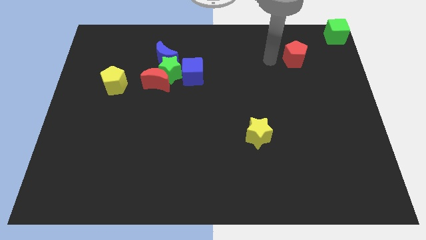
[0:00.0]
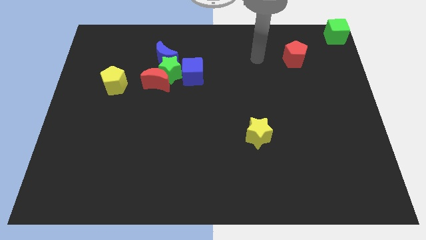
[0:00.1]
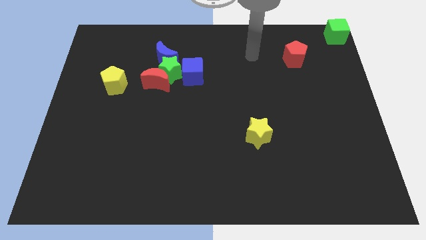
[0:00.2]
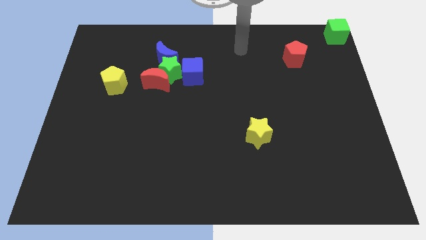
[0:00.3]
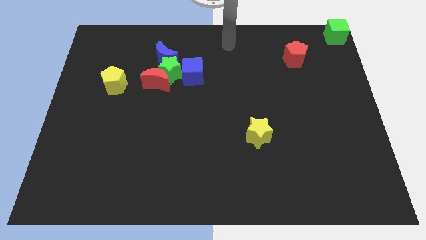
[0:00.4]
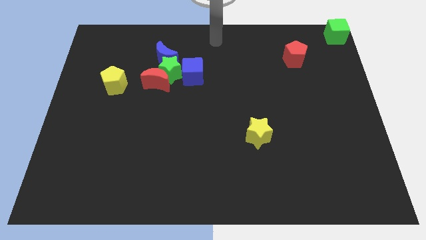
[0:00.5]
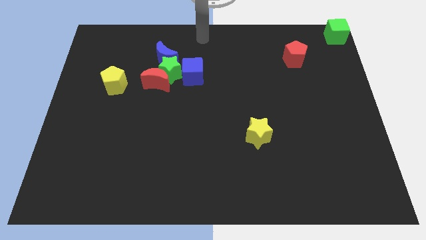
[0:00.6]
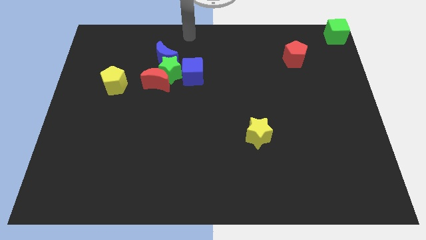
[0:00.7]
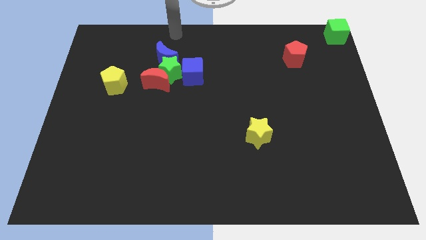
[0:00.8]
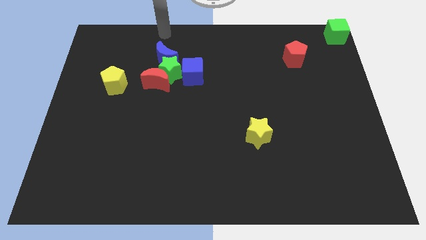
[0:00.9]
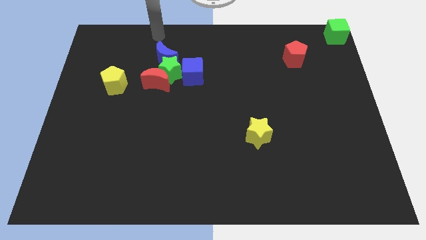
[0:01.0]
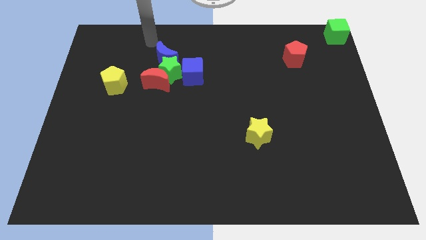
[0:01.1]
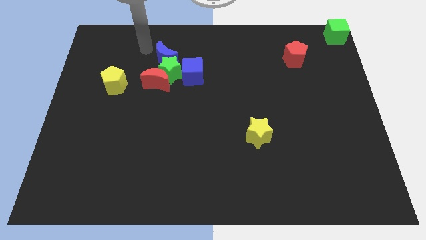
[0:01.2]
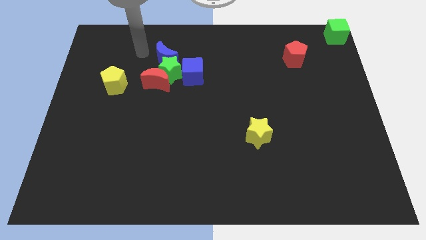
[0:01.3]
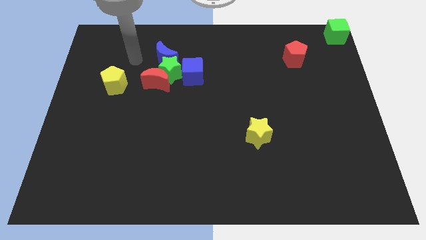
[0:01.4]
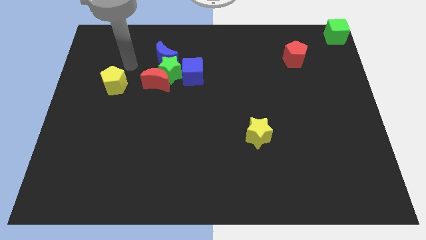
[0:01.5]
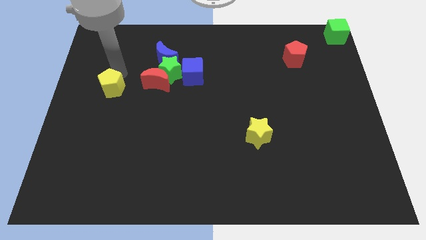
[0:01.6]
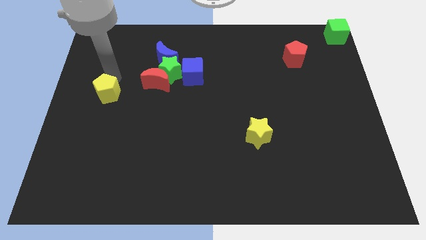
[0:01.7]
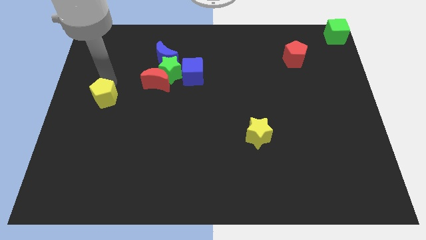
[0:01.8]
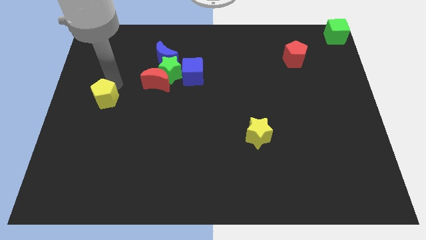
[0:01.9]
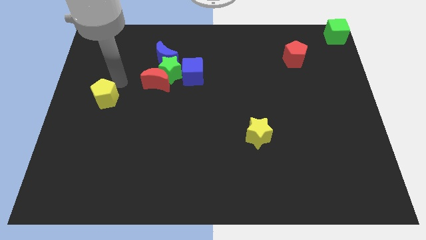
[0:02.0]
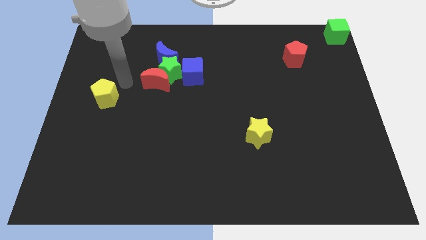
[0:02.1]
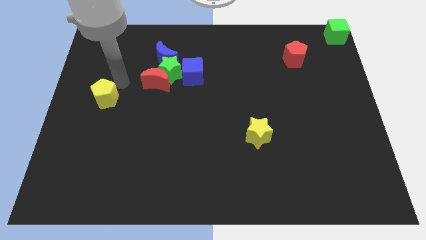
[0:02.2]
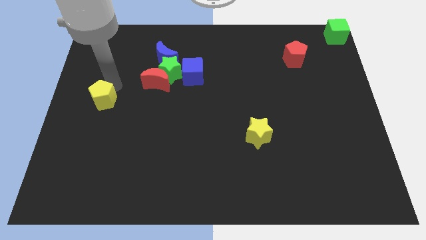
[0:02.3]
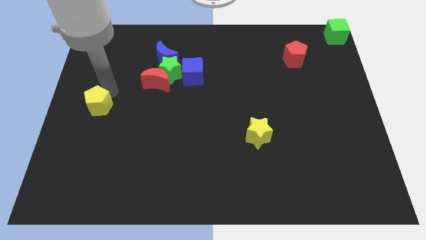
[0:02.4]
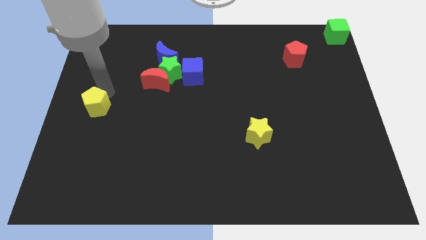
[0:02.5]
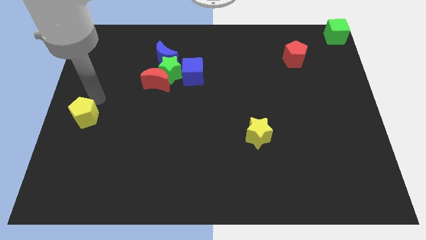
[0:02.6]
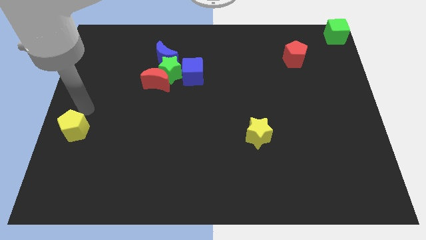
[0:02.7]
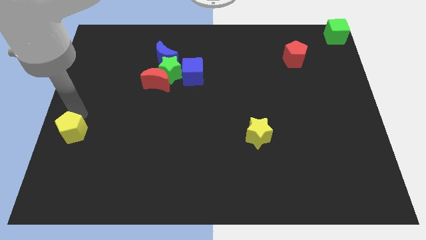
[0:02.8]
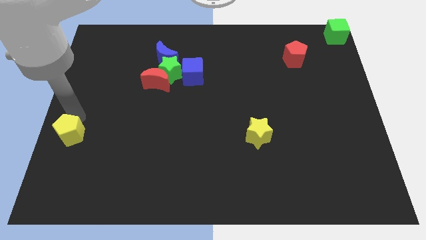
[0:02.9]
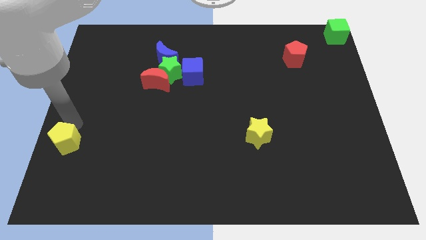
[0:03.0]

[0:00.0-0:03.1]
slide the yellow pentagon horizontally to the left side of the yellow star

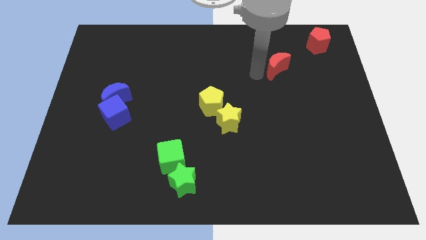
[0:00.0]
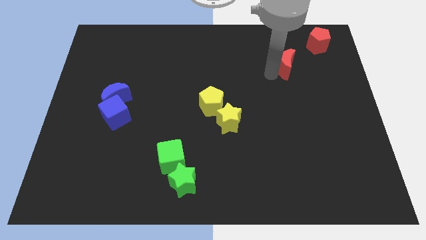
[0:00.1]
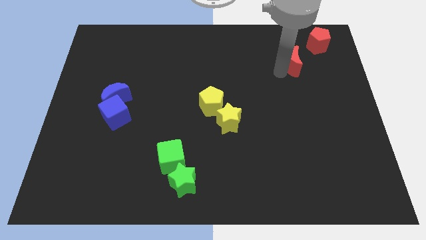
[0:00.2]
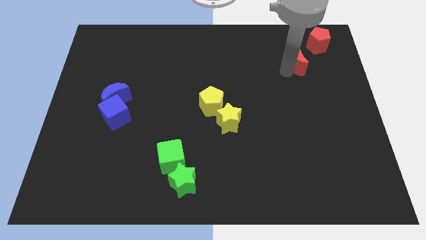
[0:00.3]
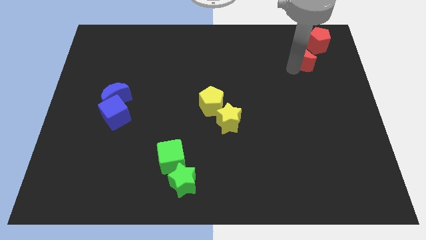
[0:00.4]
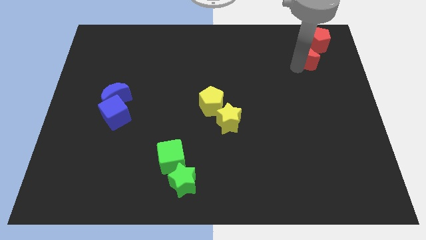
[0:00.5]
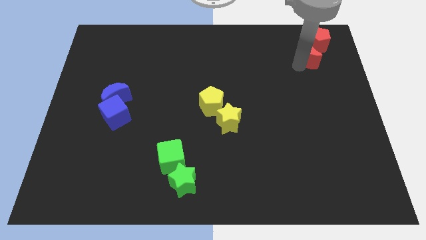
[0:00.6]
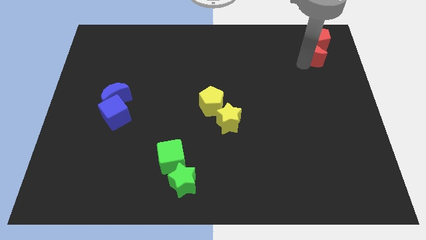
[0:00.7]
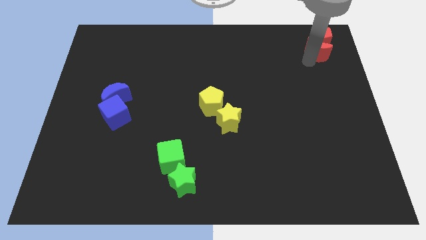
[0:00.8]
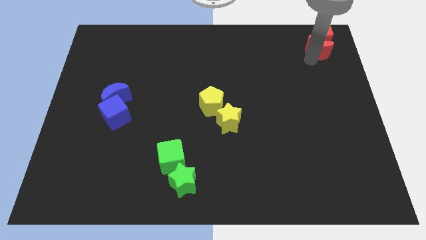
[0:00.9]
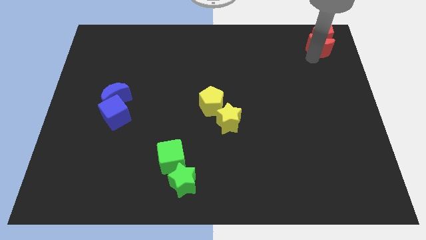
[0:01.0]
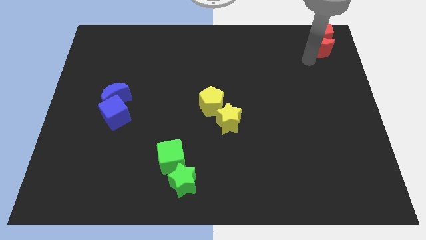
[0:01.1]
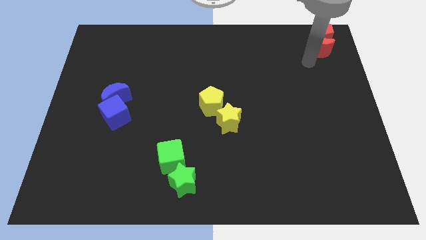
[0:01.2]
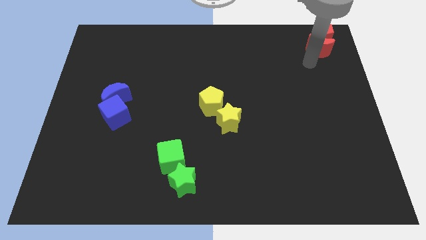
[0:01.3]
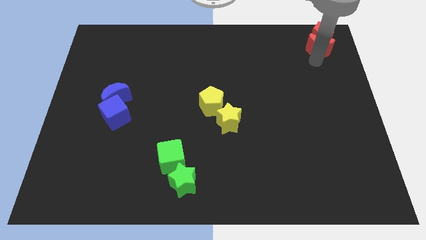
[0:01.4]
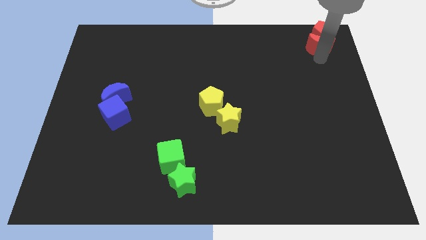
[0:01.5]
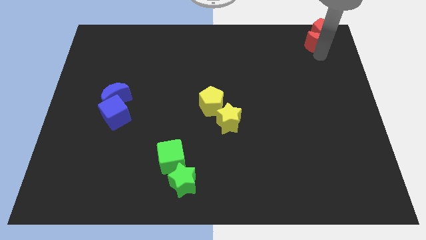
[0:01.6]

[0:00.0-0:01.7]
move the red moon into the red pentagon

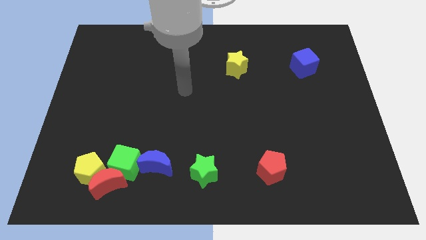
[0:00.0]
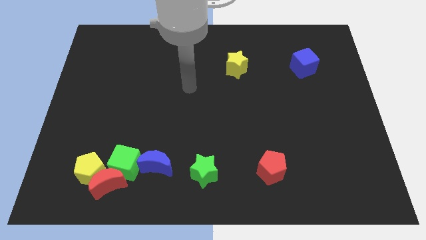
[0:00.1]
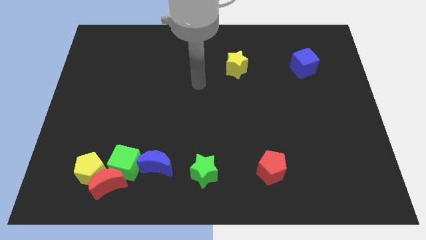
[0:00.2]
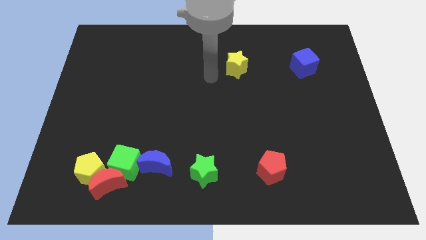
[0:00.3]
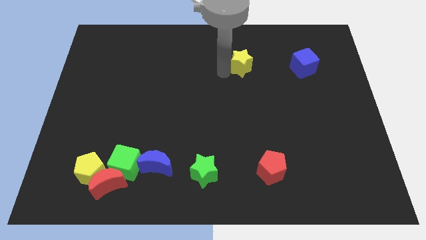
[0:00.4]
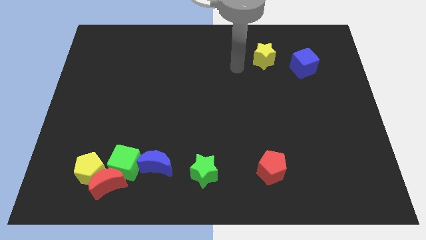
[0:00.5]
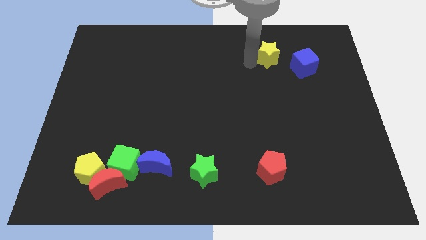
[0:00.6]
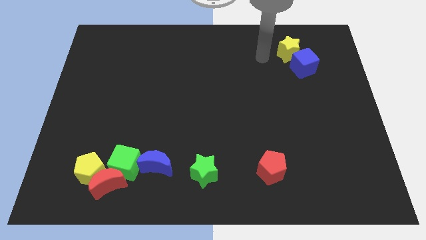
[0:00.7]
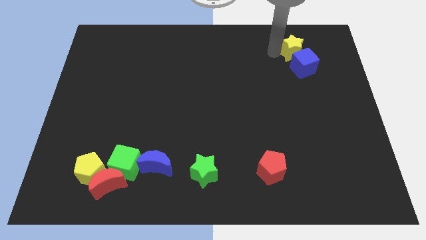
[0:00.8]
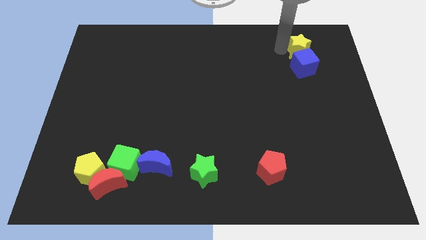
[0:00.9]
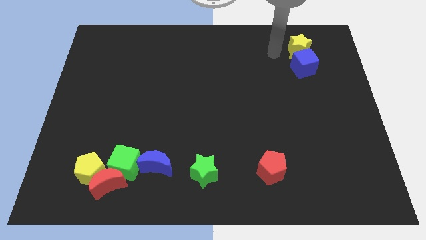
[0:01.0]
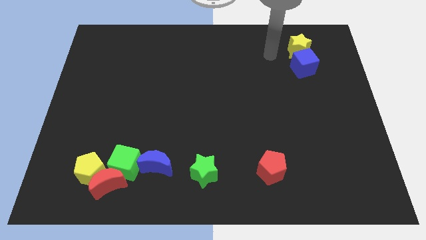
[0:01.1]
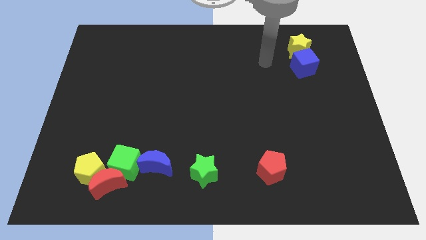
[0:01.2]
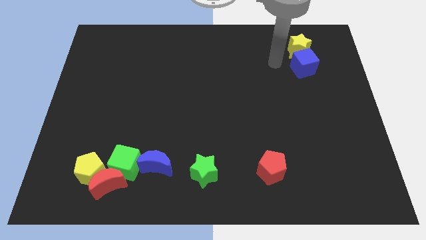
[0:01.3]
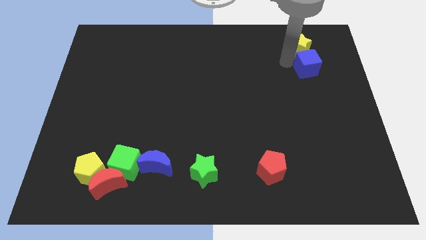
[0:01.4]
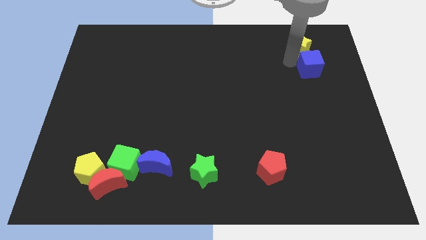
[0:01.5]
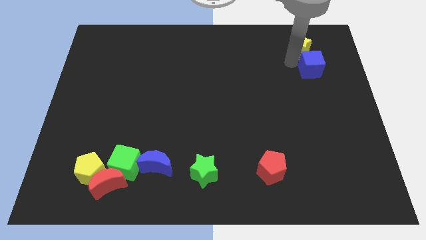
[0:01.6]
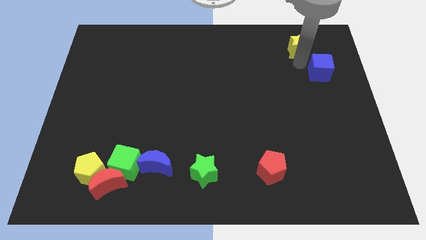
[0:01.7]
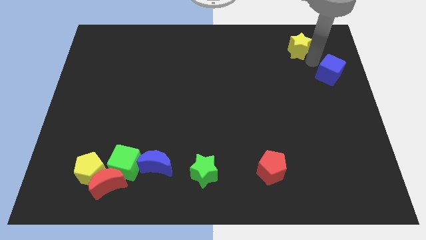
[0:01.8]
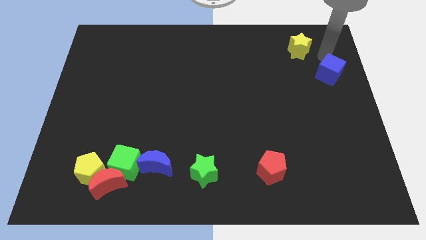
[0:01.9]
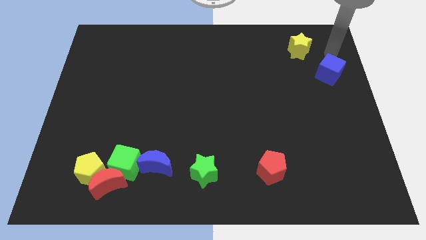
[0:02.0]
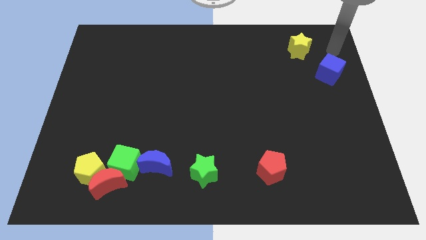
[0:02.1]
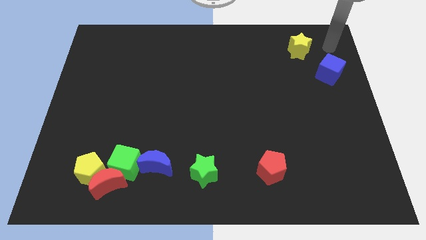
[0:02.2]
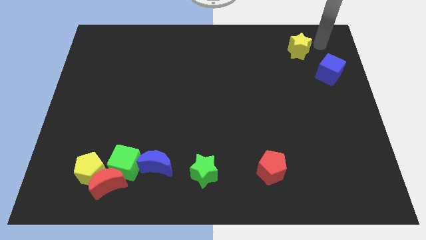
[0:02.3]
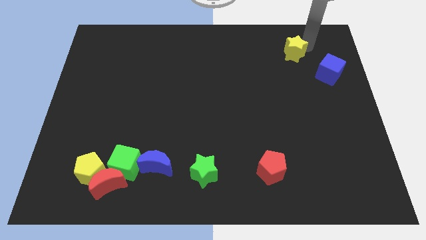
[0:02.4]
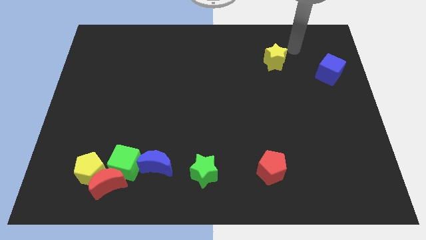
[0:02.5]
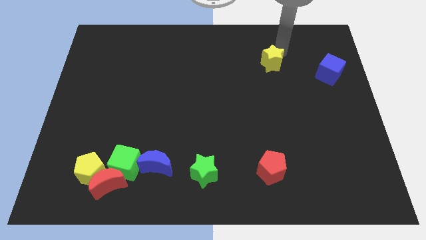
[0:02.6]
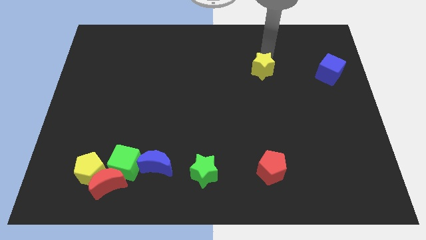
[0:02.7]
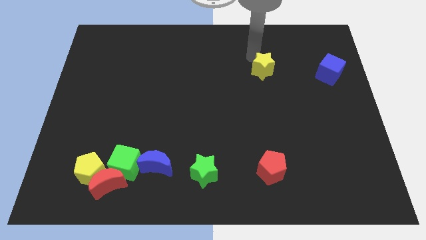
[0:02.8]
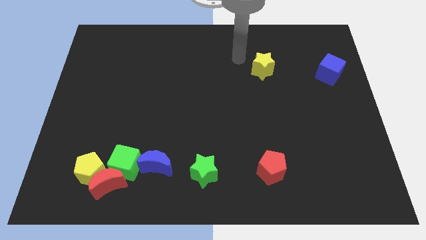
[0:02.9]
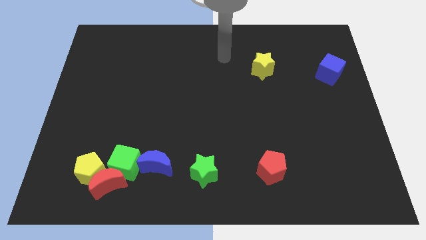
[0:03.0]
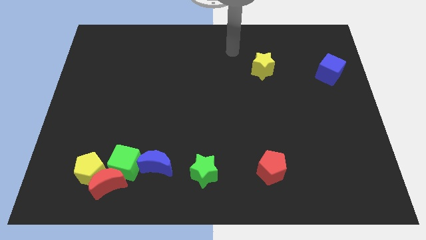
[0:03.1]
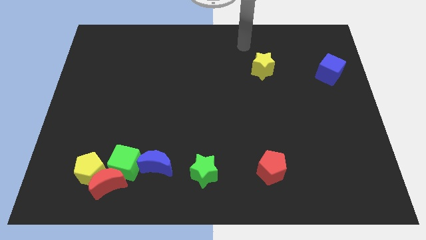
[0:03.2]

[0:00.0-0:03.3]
place the yellow star left to the blue cube

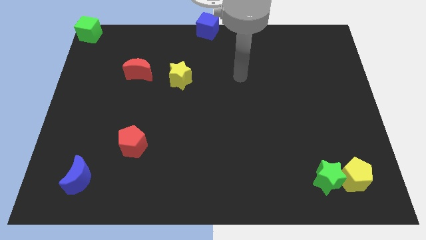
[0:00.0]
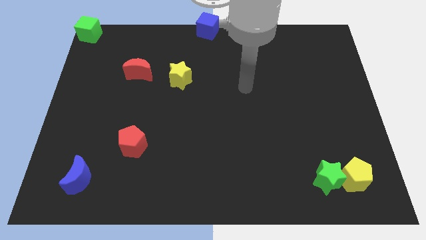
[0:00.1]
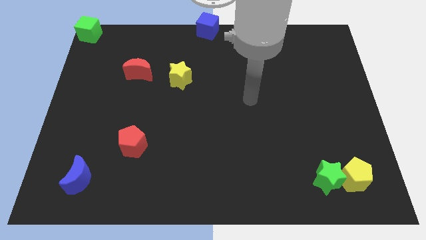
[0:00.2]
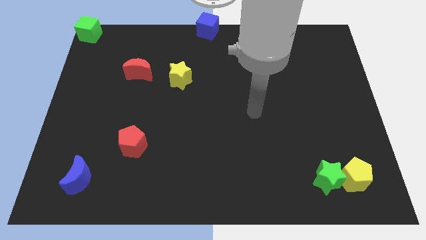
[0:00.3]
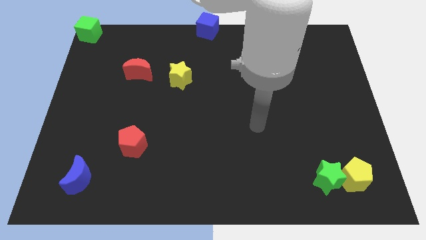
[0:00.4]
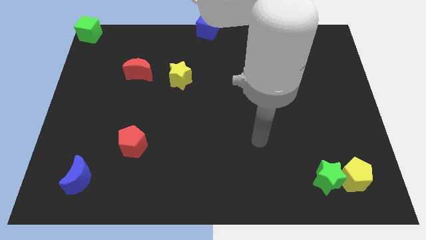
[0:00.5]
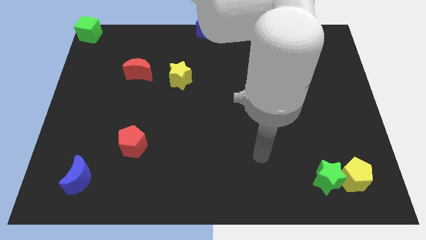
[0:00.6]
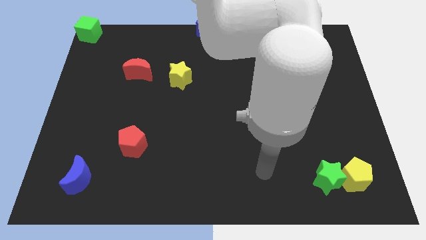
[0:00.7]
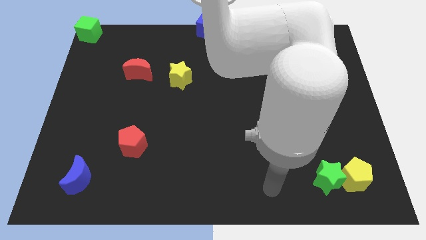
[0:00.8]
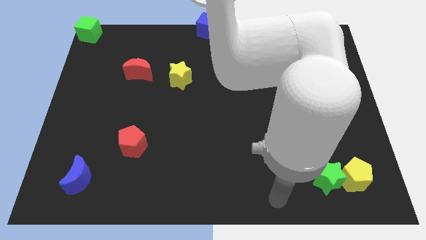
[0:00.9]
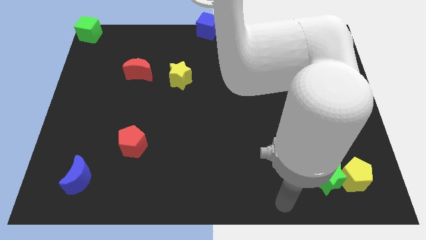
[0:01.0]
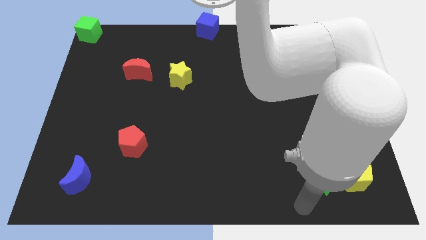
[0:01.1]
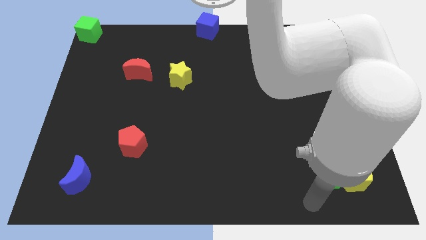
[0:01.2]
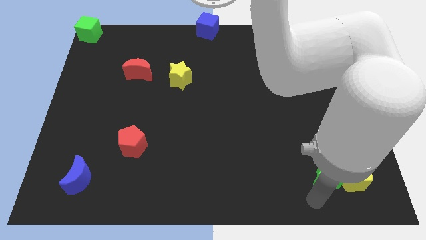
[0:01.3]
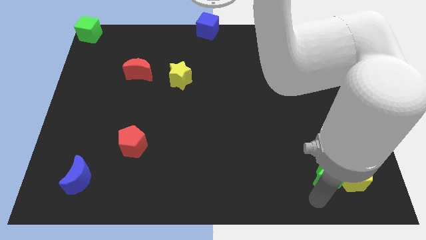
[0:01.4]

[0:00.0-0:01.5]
move your arm closer to the green star
